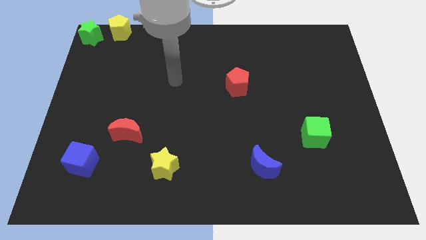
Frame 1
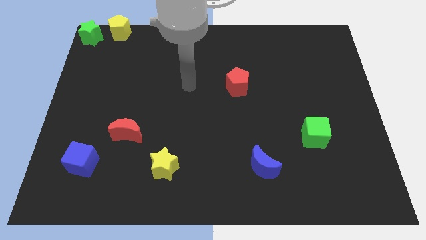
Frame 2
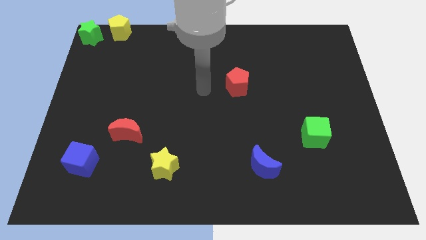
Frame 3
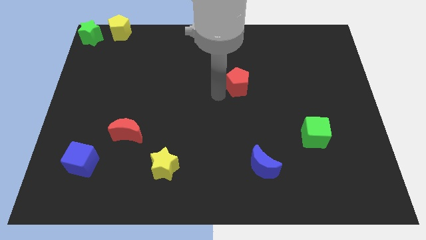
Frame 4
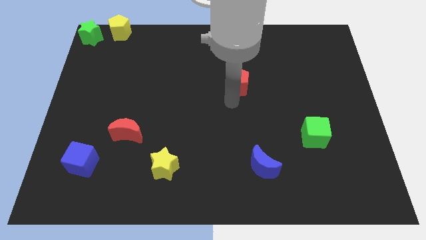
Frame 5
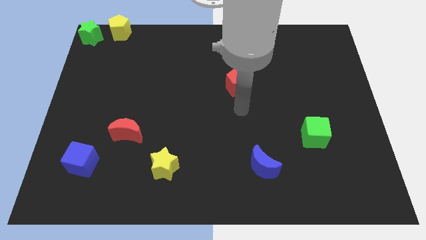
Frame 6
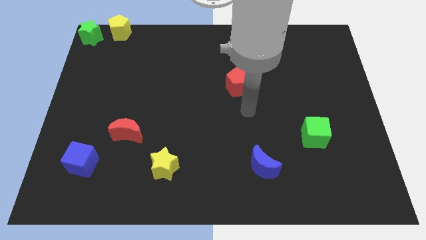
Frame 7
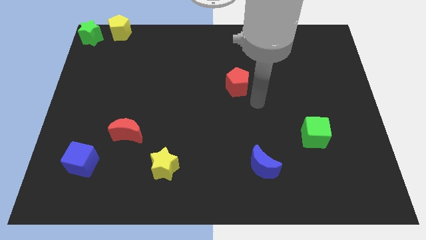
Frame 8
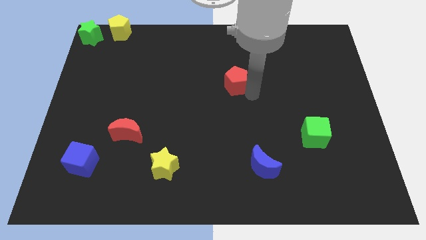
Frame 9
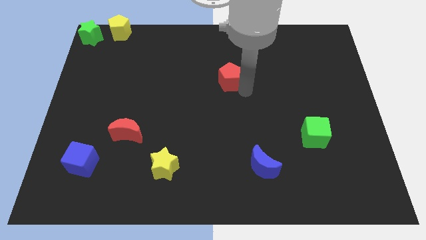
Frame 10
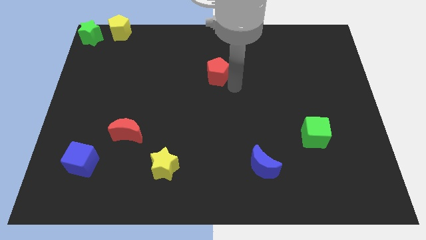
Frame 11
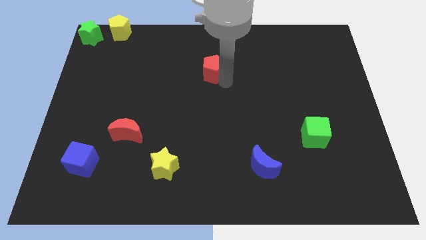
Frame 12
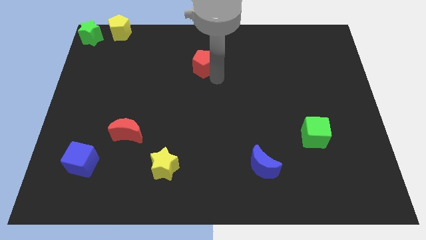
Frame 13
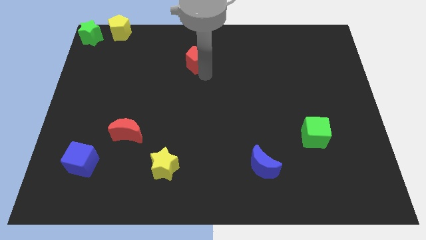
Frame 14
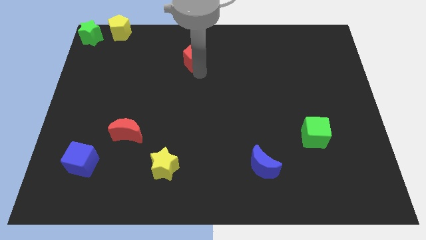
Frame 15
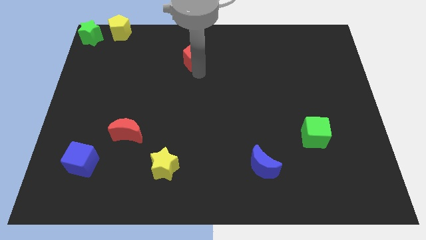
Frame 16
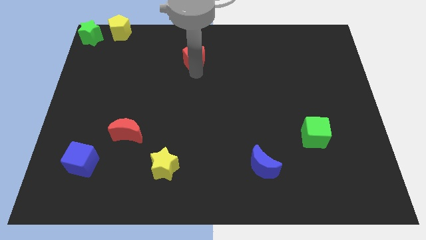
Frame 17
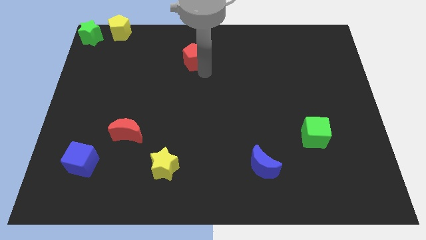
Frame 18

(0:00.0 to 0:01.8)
move the red pentagon towards the top left

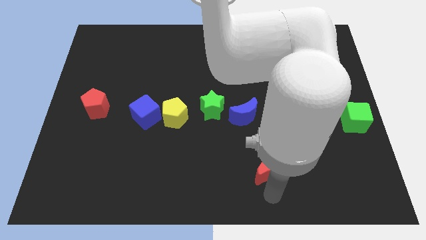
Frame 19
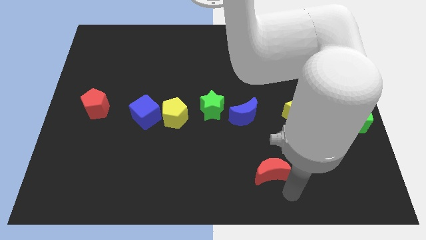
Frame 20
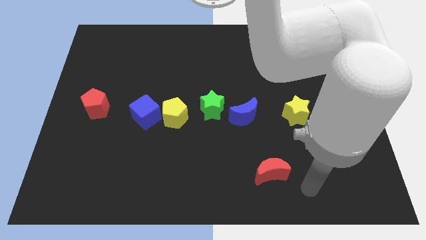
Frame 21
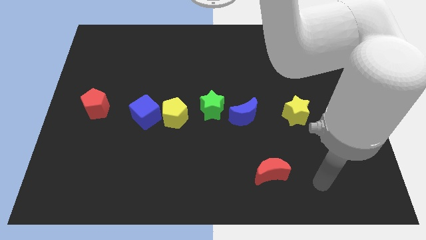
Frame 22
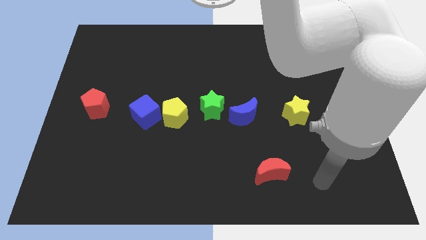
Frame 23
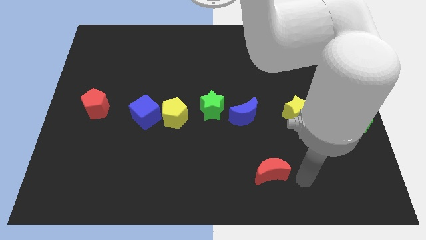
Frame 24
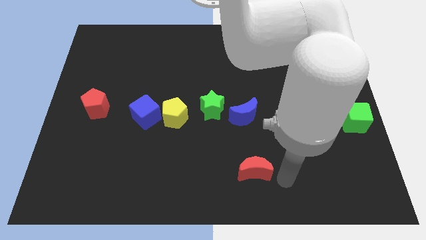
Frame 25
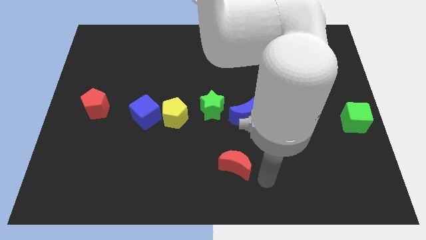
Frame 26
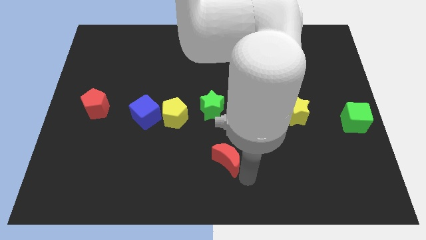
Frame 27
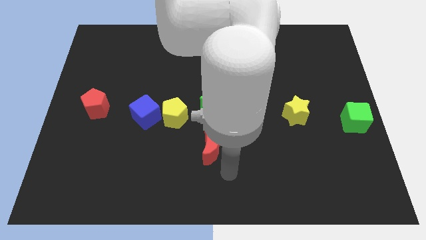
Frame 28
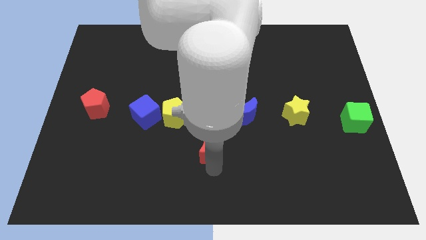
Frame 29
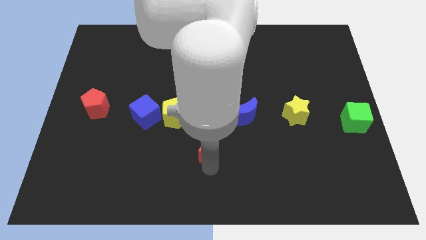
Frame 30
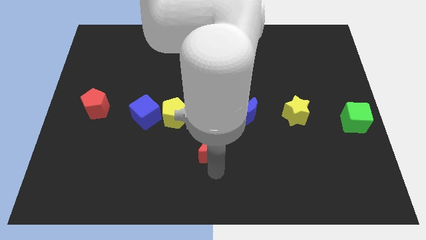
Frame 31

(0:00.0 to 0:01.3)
place the red moon below the green star

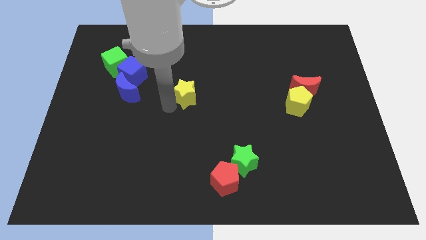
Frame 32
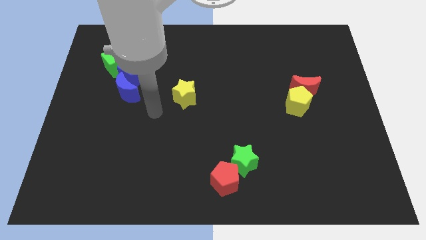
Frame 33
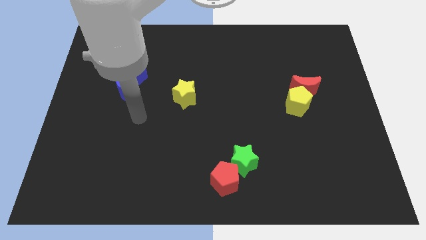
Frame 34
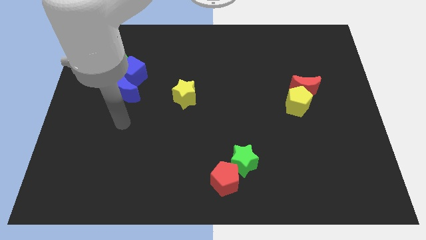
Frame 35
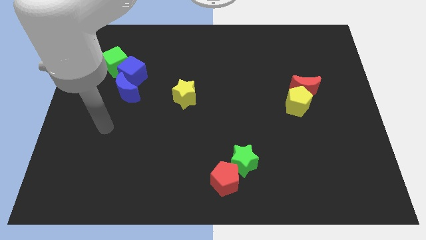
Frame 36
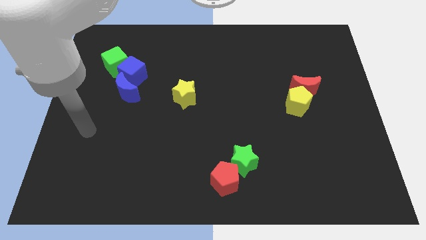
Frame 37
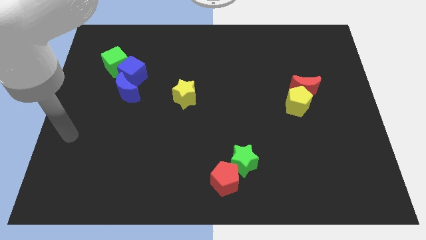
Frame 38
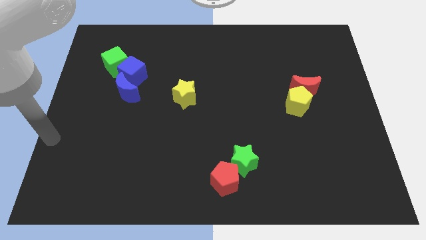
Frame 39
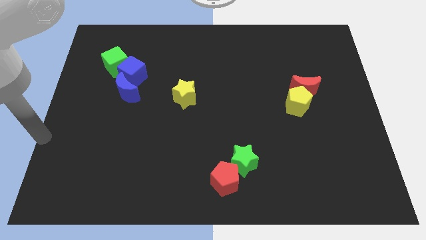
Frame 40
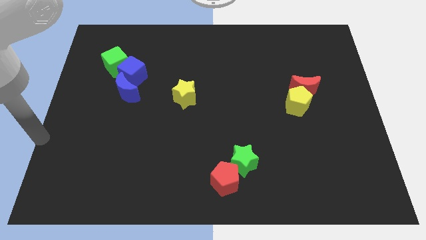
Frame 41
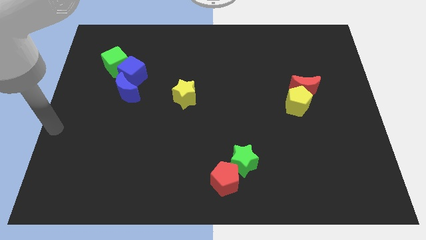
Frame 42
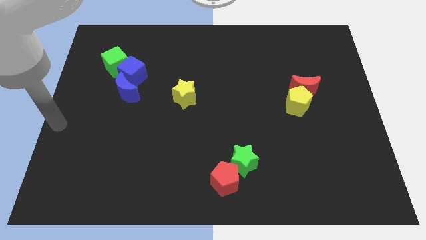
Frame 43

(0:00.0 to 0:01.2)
move your arm away from the yellow star

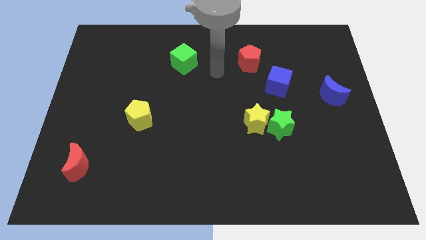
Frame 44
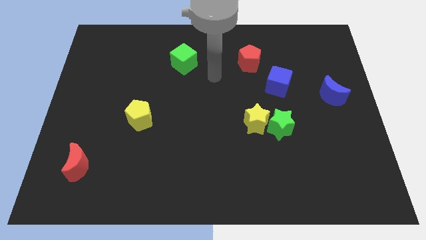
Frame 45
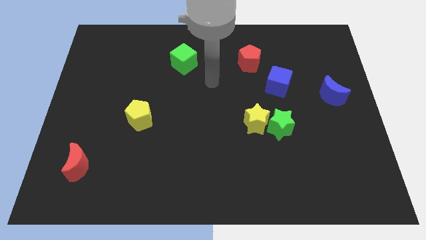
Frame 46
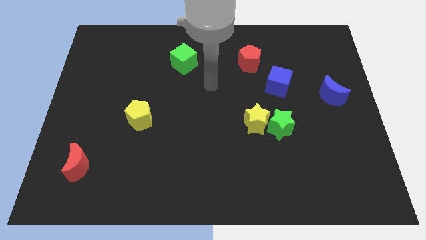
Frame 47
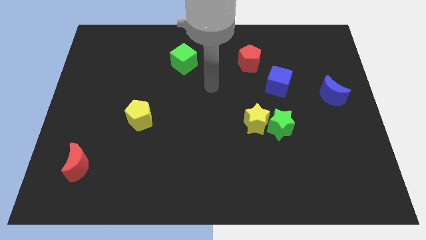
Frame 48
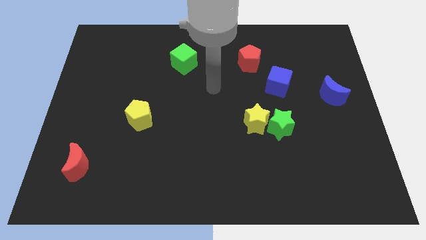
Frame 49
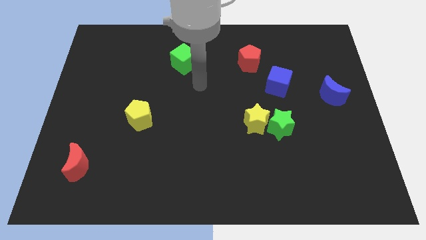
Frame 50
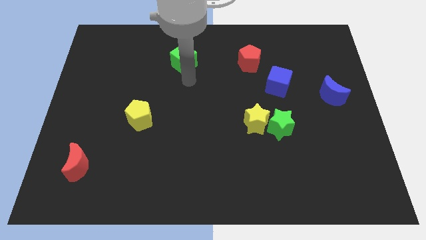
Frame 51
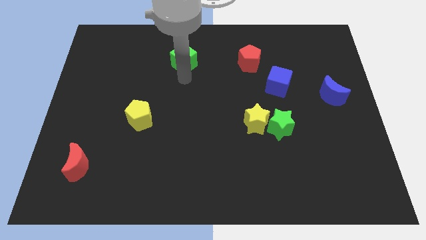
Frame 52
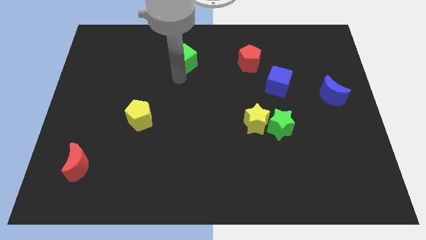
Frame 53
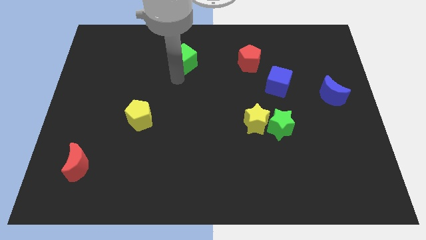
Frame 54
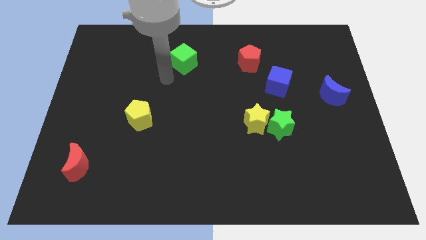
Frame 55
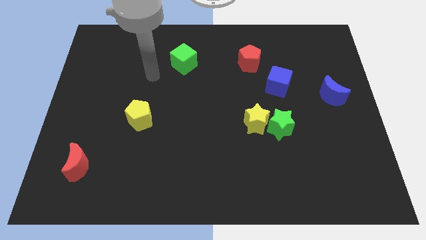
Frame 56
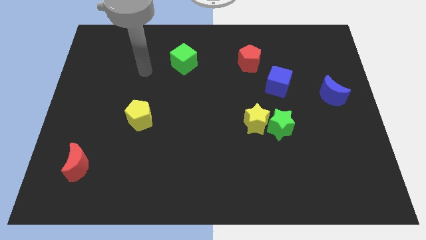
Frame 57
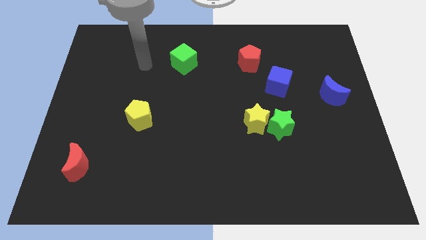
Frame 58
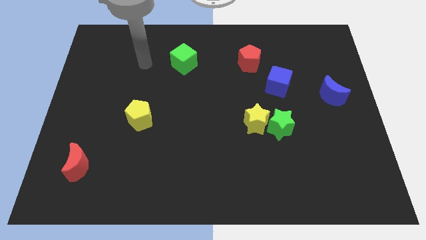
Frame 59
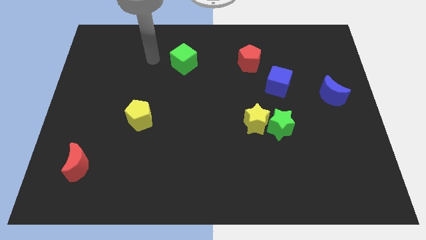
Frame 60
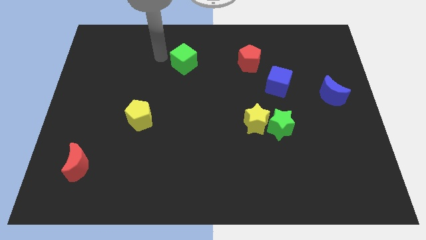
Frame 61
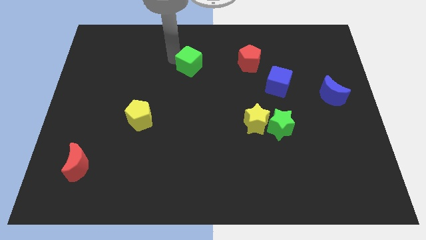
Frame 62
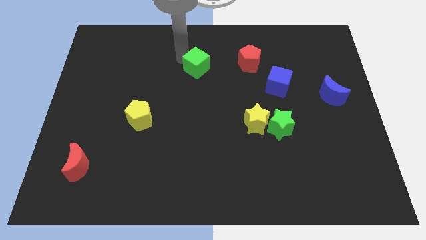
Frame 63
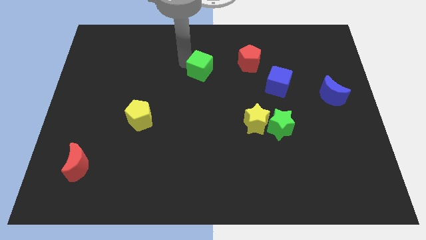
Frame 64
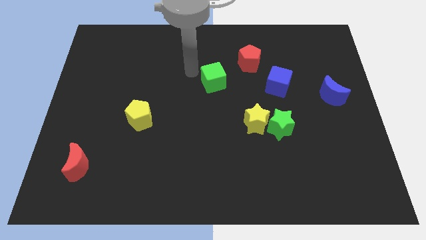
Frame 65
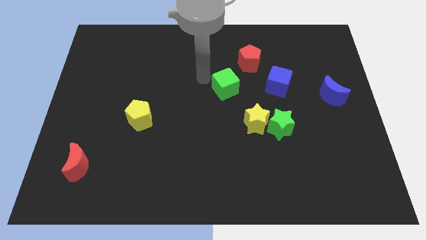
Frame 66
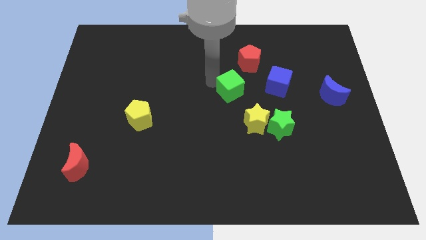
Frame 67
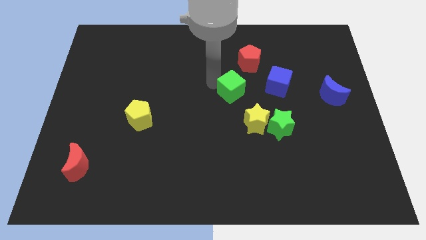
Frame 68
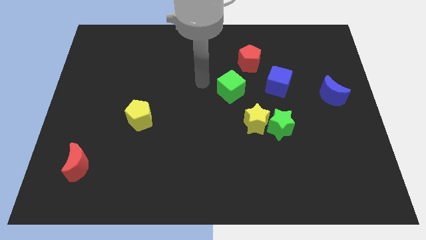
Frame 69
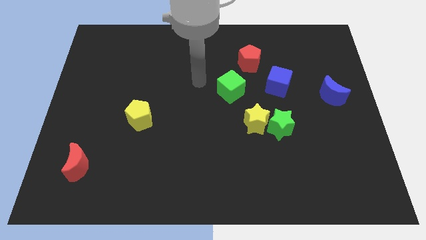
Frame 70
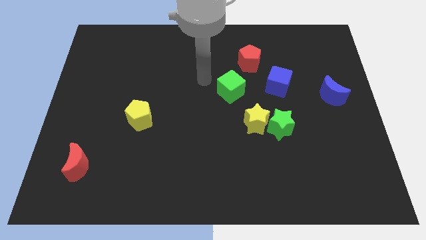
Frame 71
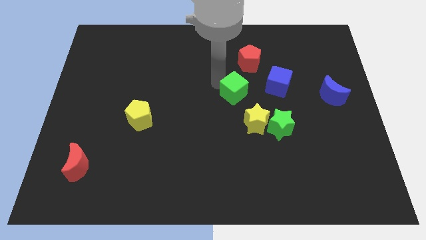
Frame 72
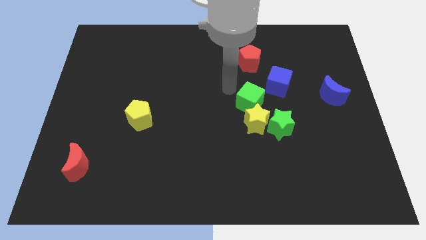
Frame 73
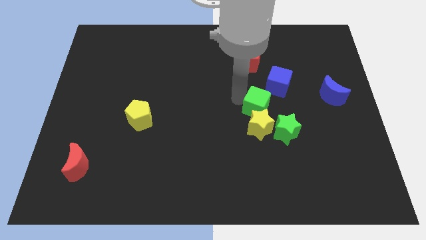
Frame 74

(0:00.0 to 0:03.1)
place green cube to the bottom left of blue cube

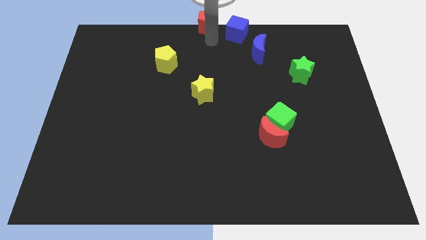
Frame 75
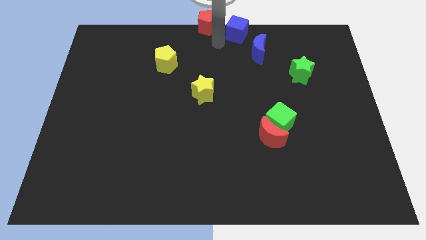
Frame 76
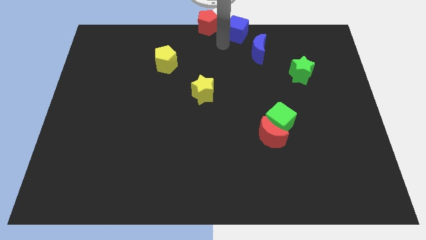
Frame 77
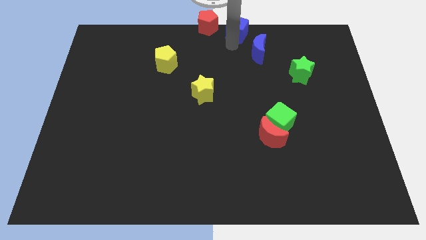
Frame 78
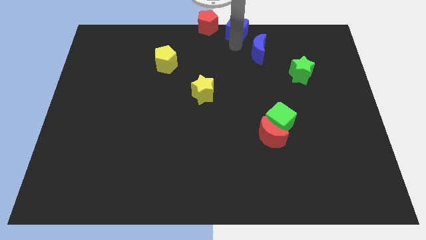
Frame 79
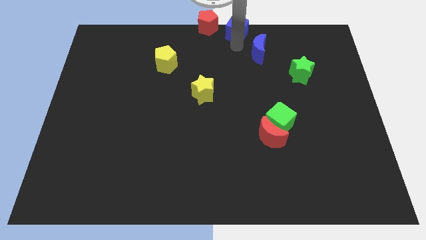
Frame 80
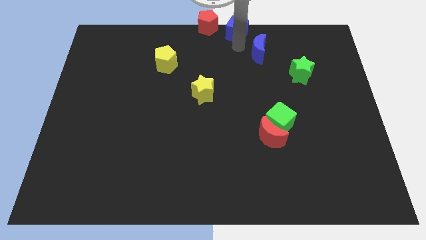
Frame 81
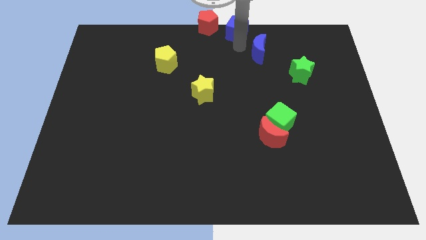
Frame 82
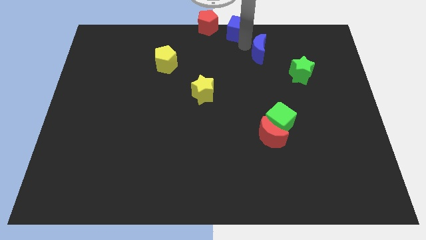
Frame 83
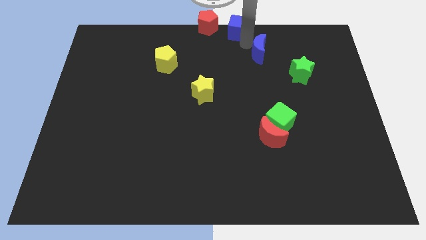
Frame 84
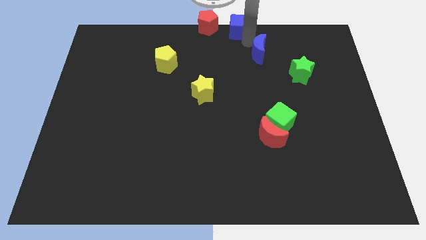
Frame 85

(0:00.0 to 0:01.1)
touch the blue cube at the bottom

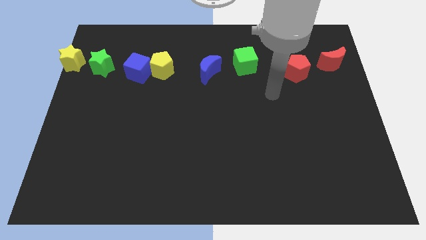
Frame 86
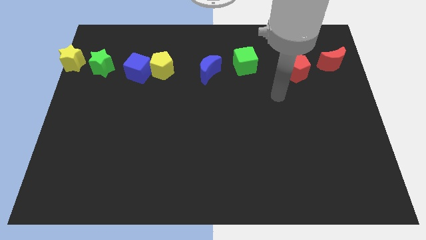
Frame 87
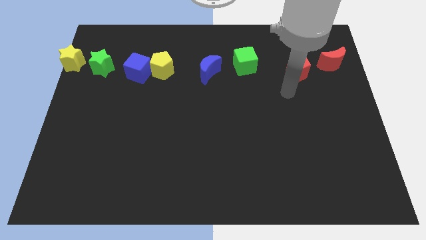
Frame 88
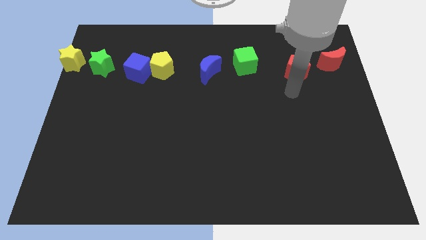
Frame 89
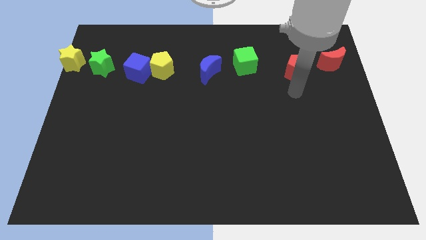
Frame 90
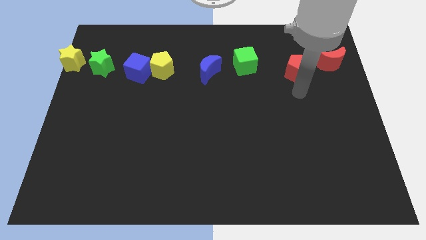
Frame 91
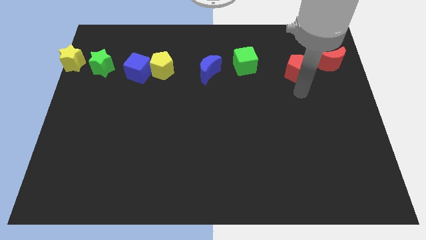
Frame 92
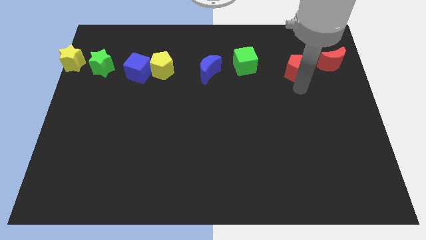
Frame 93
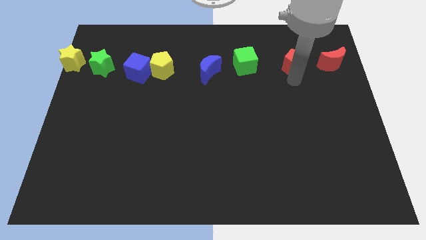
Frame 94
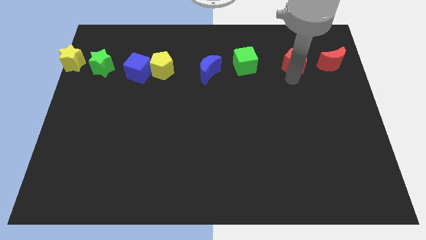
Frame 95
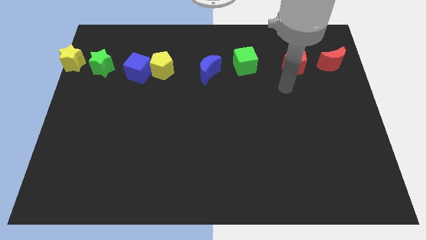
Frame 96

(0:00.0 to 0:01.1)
move the red pentagon slightly to the top
